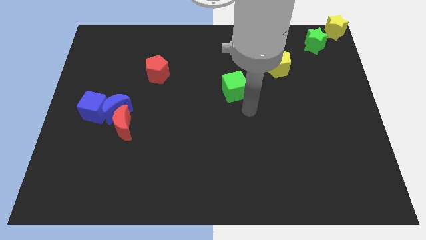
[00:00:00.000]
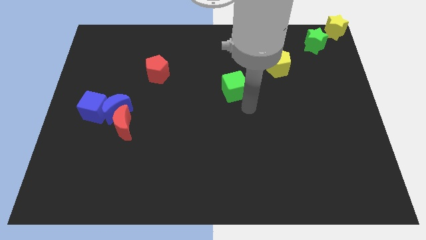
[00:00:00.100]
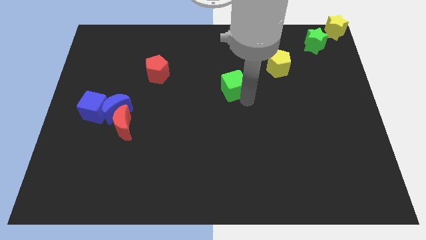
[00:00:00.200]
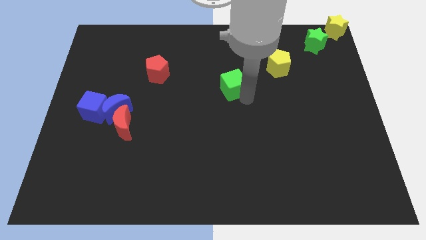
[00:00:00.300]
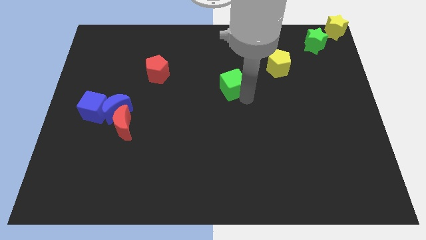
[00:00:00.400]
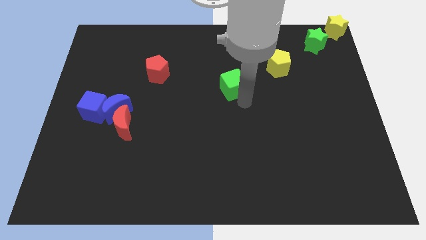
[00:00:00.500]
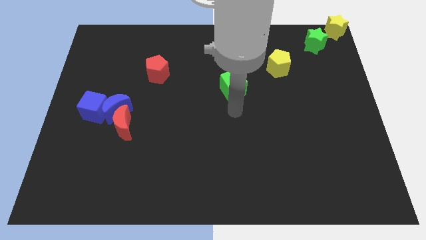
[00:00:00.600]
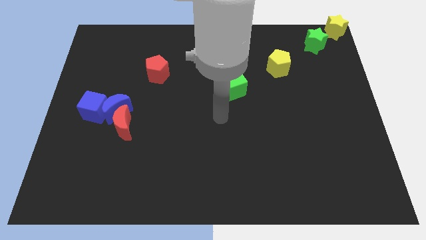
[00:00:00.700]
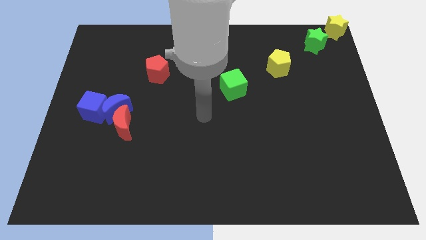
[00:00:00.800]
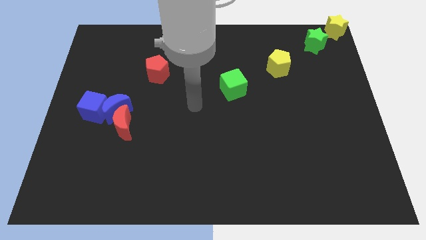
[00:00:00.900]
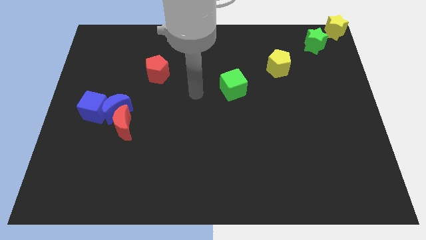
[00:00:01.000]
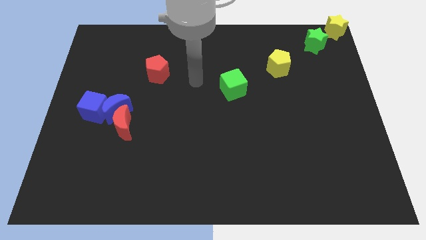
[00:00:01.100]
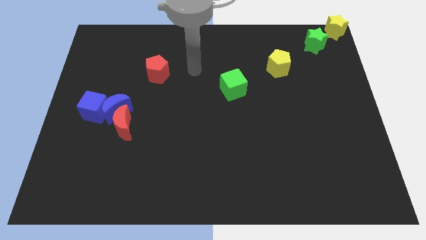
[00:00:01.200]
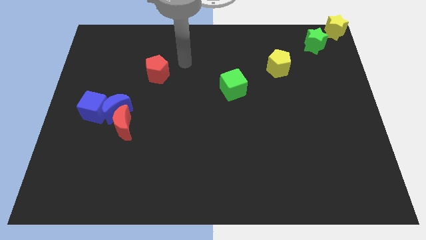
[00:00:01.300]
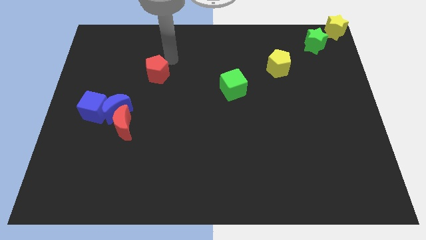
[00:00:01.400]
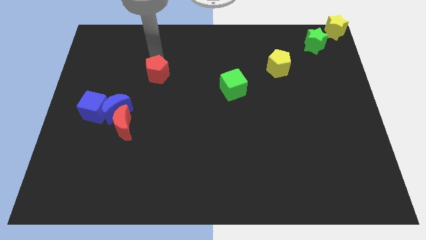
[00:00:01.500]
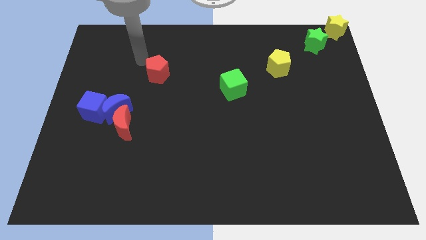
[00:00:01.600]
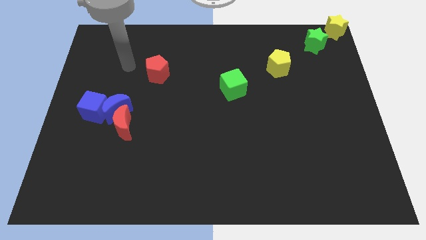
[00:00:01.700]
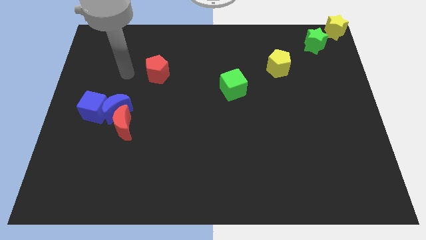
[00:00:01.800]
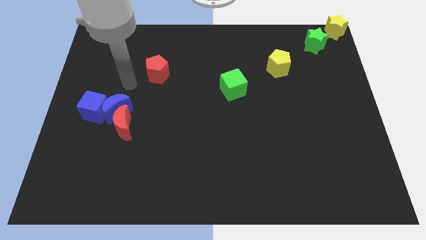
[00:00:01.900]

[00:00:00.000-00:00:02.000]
move your arm to the left side of the red pentagon

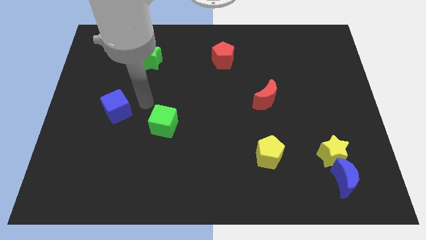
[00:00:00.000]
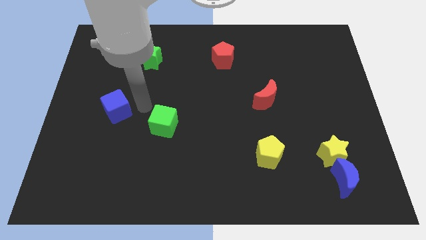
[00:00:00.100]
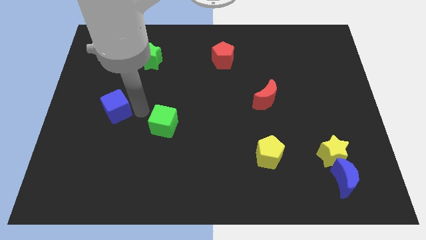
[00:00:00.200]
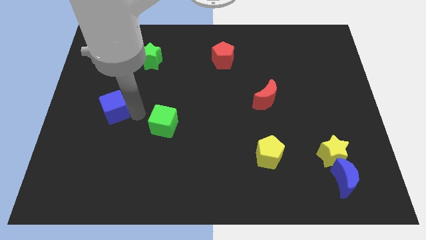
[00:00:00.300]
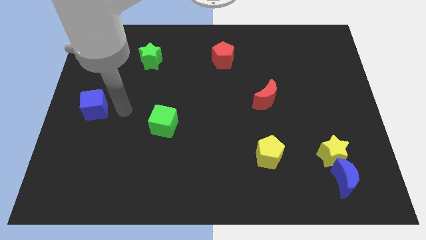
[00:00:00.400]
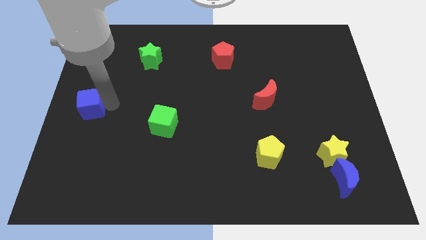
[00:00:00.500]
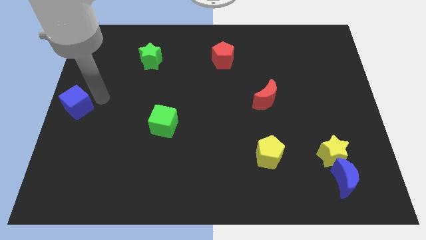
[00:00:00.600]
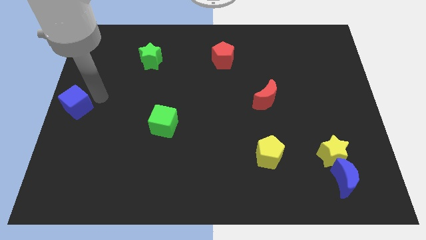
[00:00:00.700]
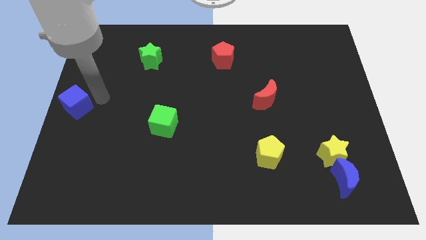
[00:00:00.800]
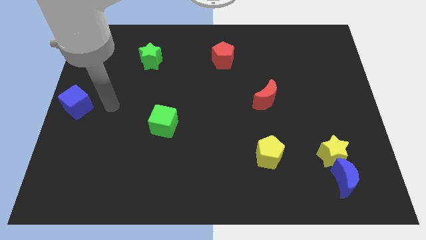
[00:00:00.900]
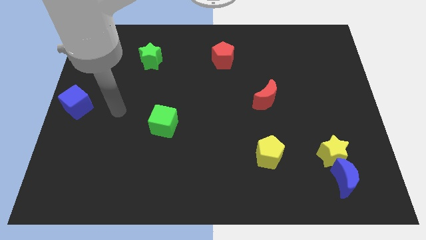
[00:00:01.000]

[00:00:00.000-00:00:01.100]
push the blue cube to the center left of the board

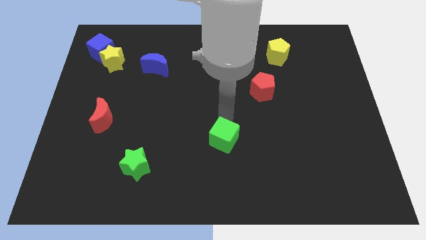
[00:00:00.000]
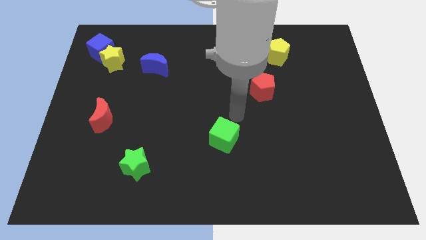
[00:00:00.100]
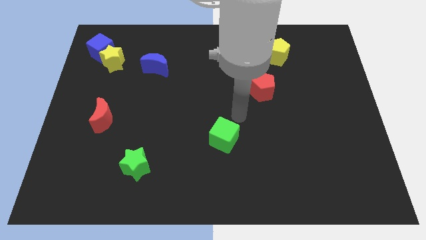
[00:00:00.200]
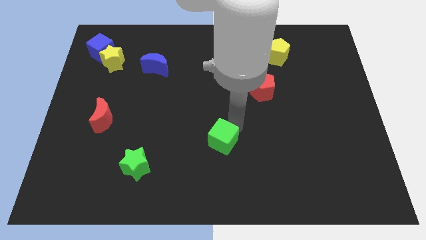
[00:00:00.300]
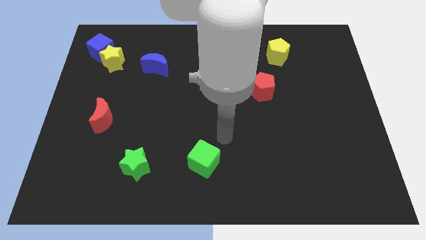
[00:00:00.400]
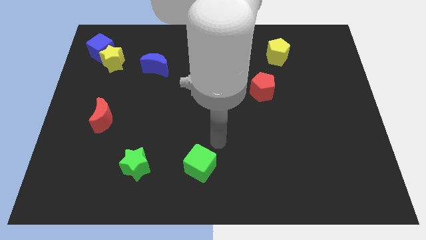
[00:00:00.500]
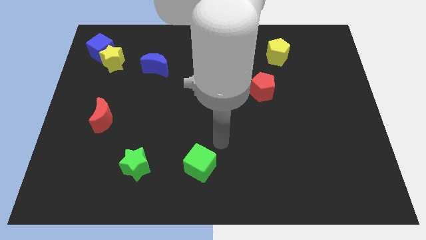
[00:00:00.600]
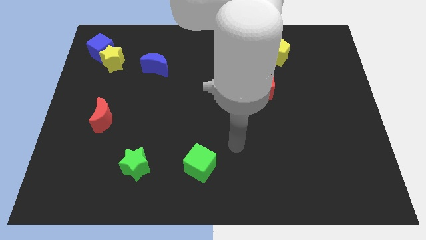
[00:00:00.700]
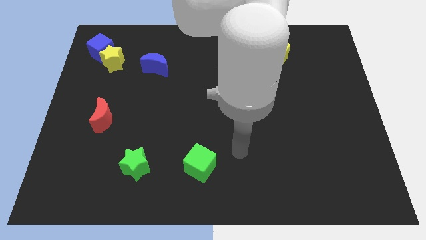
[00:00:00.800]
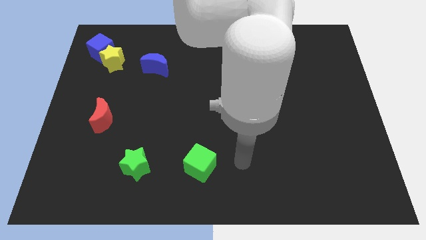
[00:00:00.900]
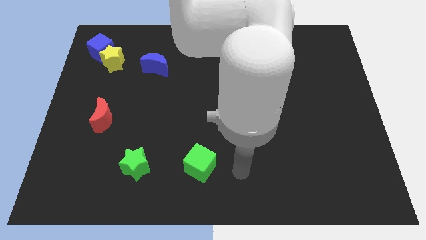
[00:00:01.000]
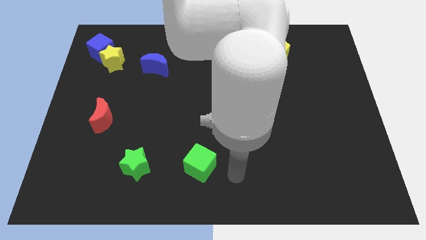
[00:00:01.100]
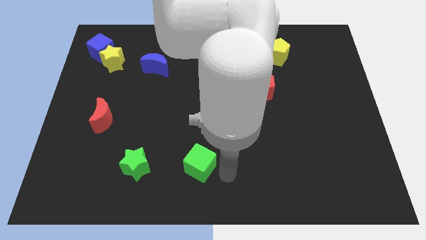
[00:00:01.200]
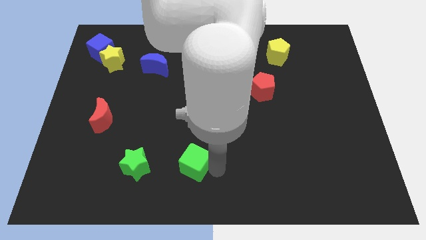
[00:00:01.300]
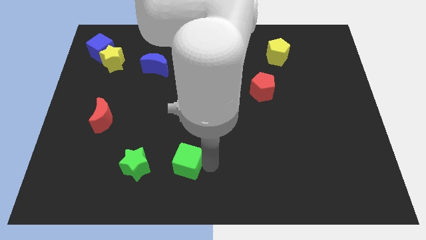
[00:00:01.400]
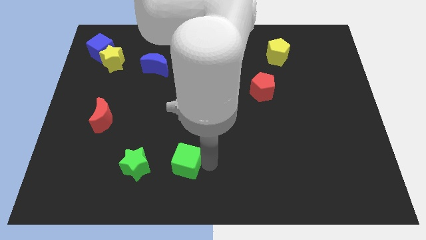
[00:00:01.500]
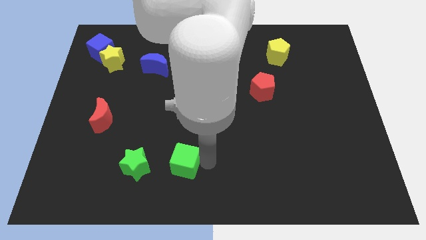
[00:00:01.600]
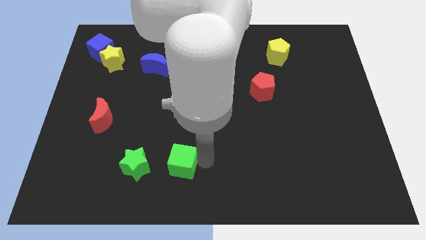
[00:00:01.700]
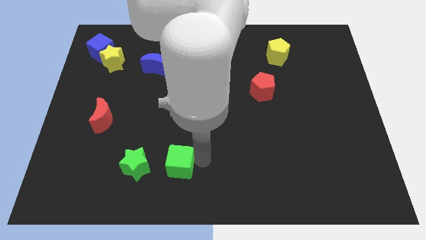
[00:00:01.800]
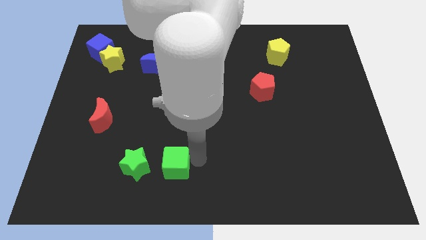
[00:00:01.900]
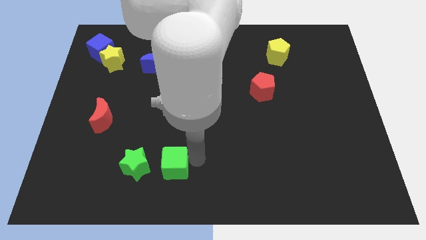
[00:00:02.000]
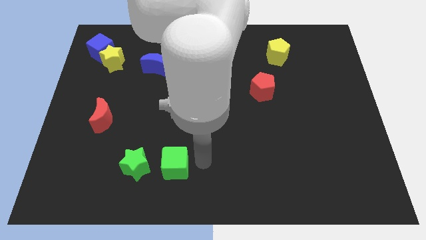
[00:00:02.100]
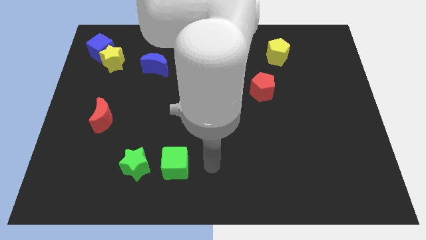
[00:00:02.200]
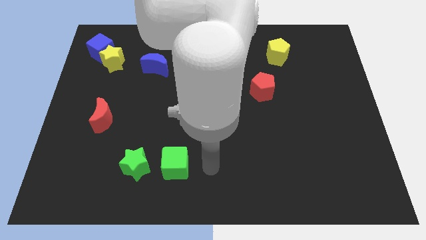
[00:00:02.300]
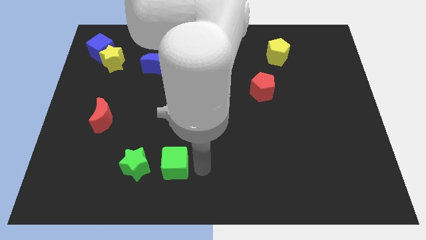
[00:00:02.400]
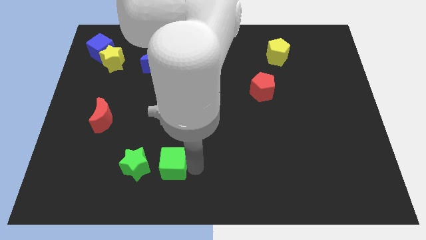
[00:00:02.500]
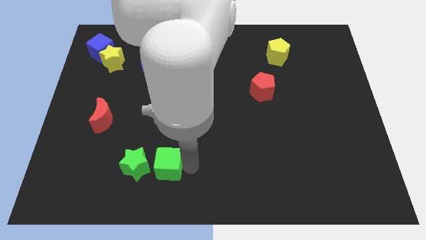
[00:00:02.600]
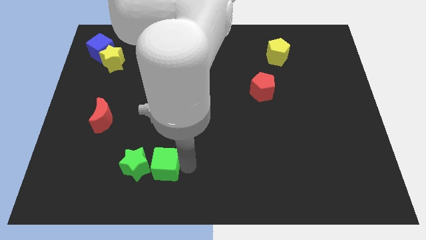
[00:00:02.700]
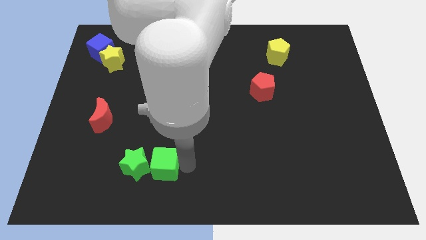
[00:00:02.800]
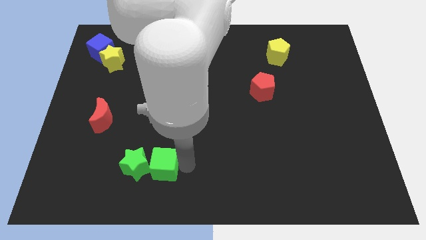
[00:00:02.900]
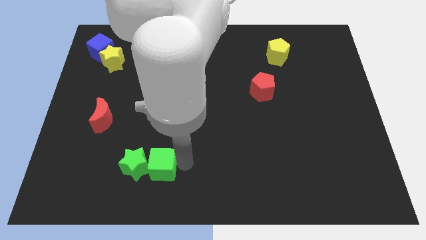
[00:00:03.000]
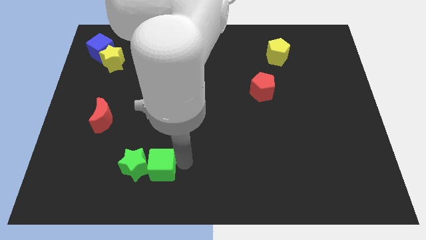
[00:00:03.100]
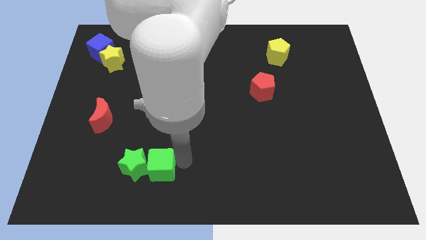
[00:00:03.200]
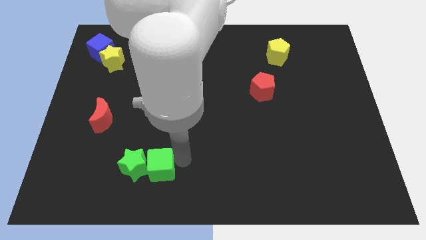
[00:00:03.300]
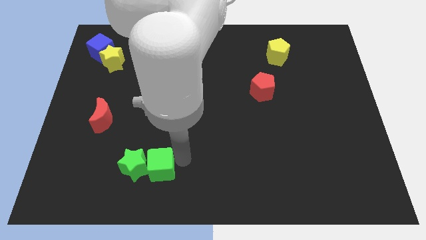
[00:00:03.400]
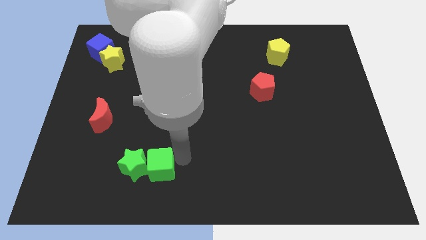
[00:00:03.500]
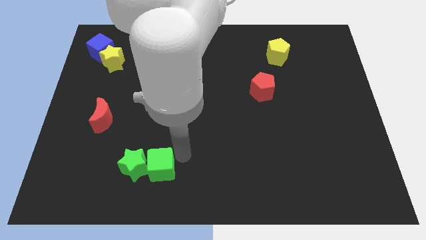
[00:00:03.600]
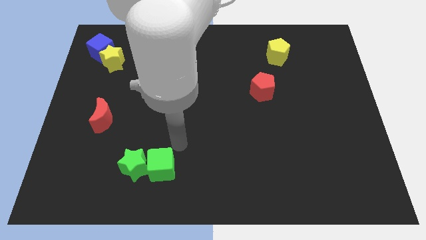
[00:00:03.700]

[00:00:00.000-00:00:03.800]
push the green cube in to the green star

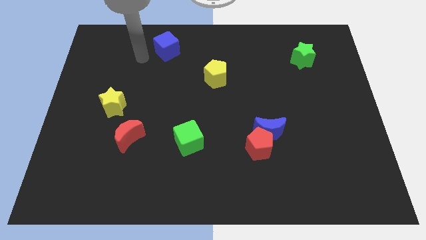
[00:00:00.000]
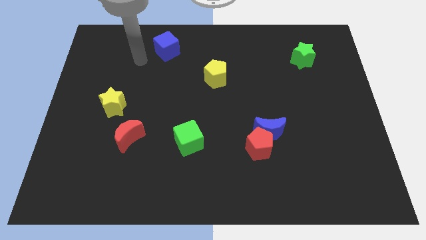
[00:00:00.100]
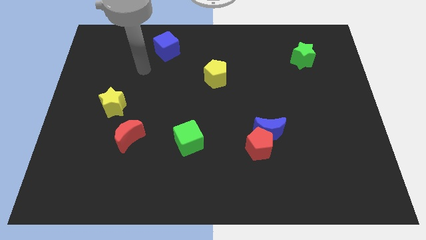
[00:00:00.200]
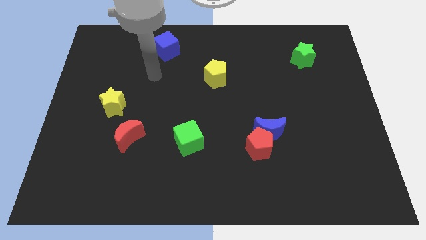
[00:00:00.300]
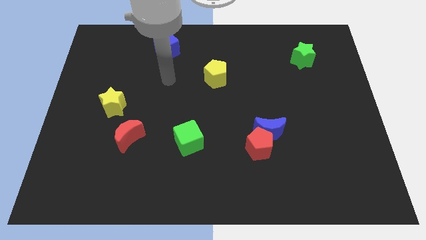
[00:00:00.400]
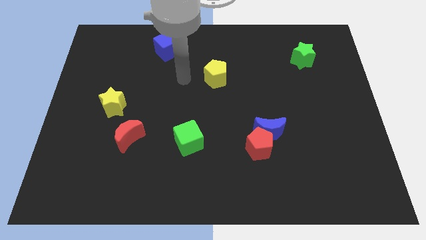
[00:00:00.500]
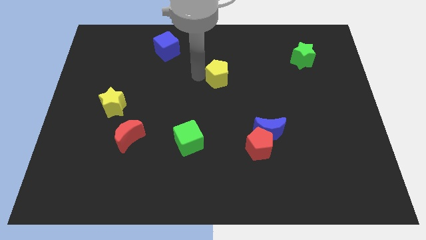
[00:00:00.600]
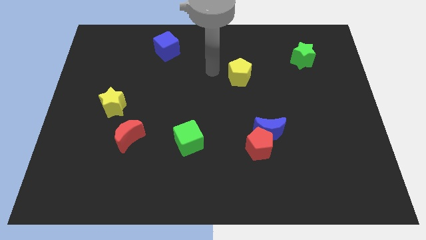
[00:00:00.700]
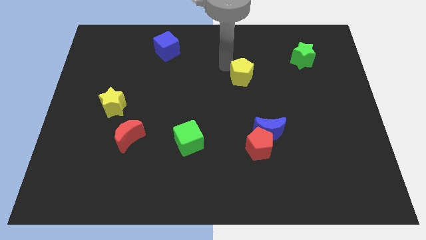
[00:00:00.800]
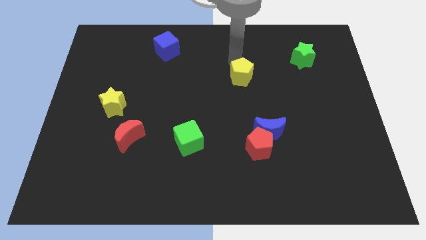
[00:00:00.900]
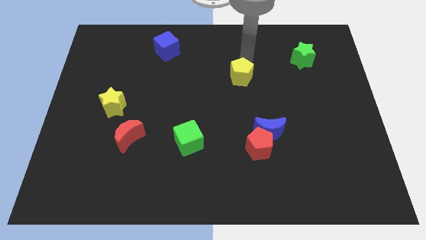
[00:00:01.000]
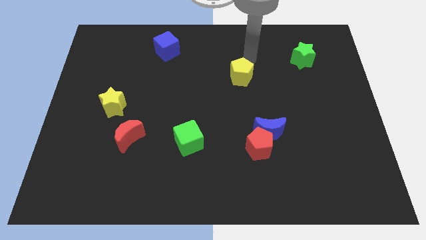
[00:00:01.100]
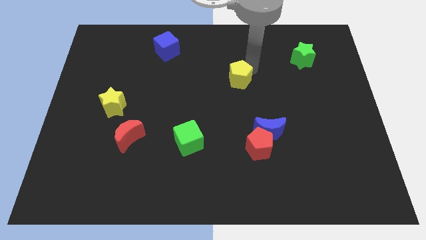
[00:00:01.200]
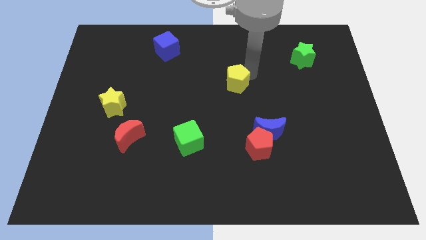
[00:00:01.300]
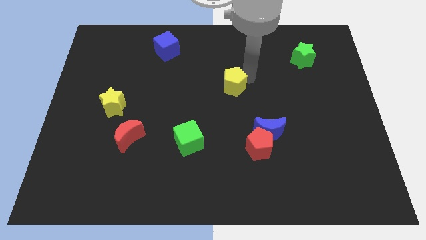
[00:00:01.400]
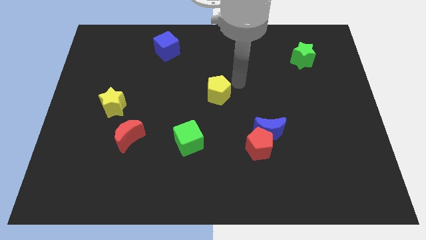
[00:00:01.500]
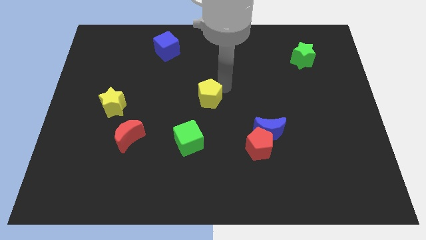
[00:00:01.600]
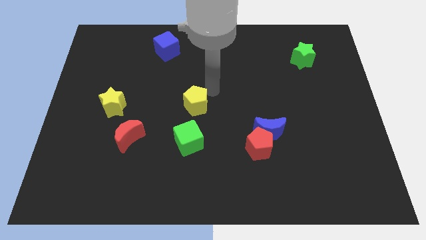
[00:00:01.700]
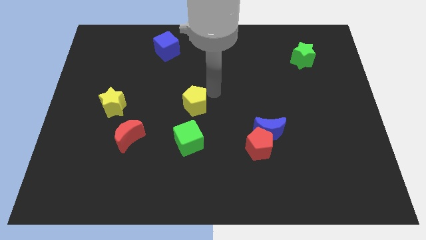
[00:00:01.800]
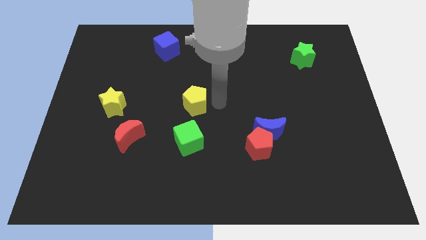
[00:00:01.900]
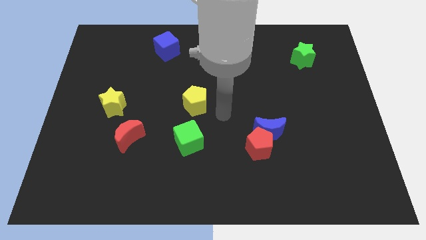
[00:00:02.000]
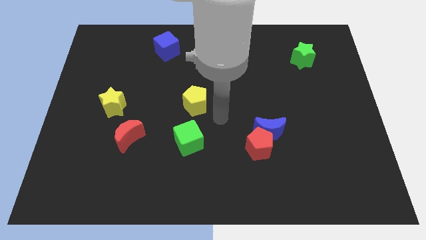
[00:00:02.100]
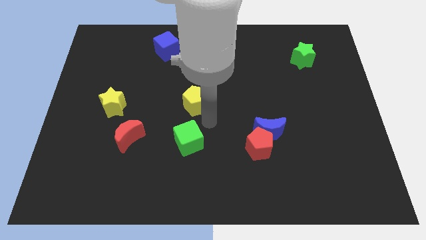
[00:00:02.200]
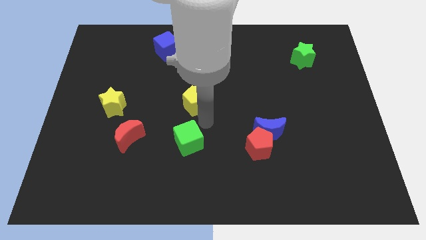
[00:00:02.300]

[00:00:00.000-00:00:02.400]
place the yellow pentagon at the top of green cube
